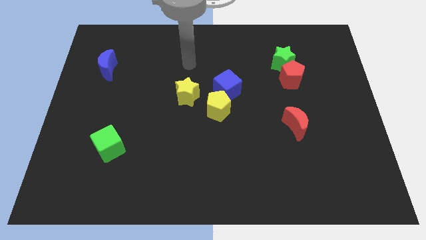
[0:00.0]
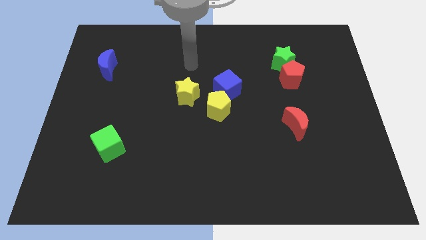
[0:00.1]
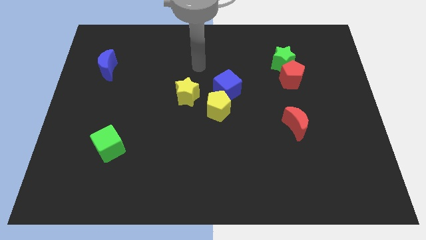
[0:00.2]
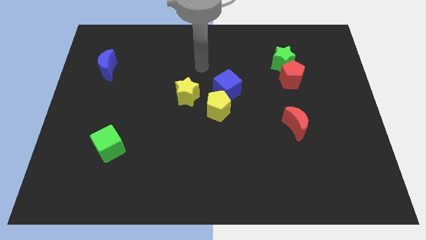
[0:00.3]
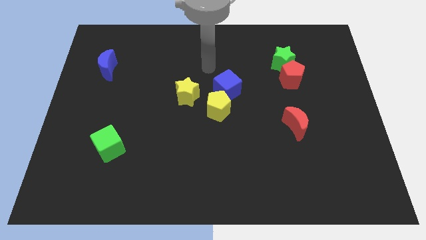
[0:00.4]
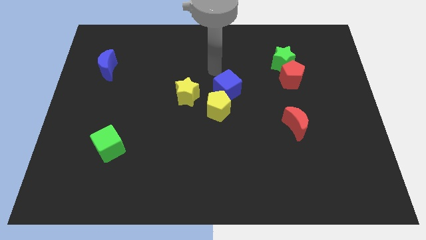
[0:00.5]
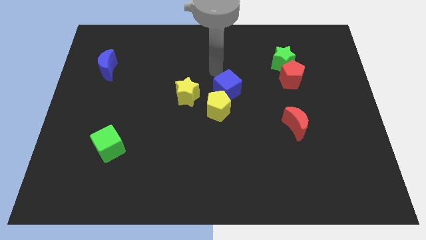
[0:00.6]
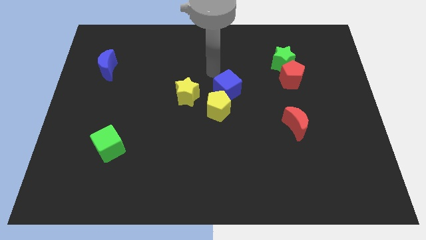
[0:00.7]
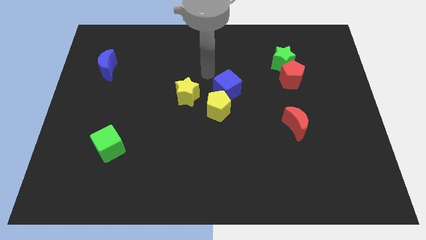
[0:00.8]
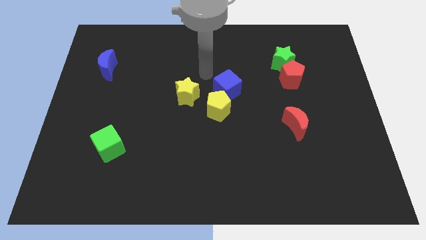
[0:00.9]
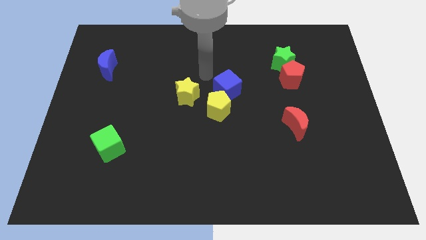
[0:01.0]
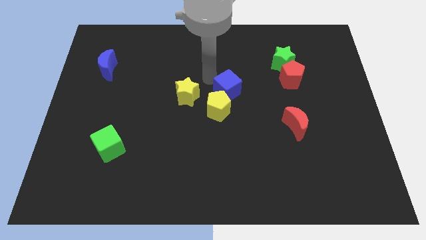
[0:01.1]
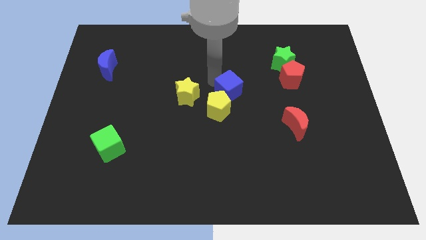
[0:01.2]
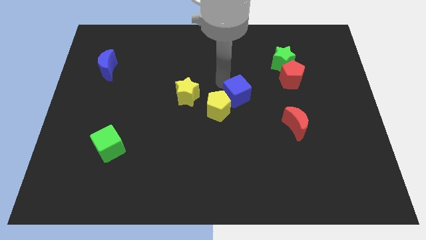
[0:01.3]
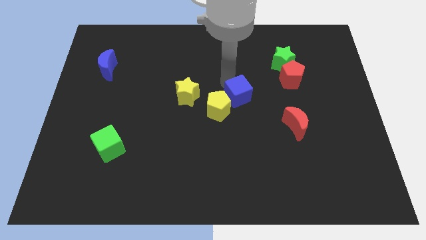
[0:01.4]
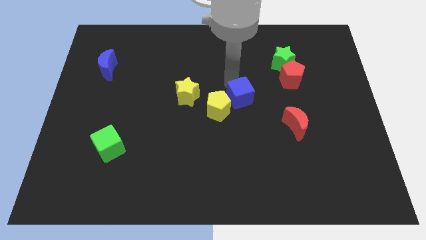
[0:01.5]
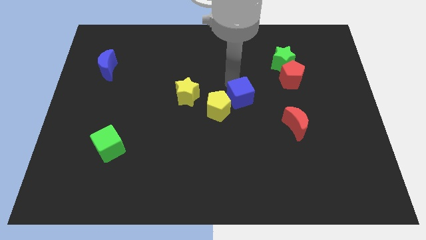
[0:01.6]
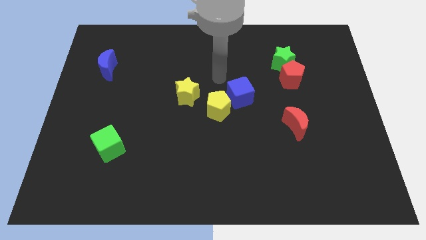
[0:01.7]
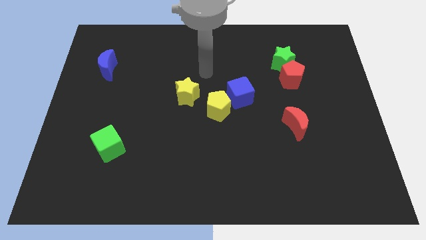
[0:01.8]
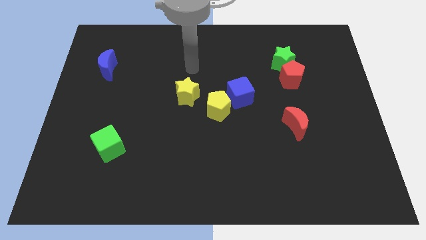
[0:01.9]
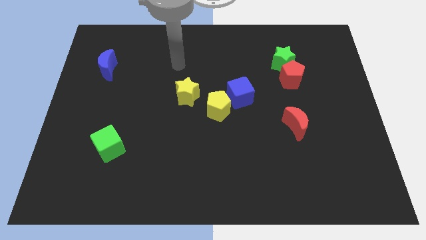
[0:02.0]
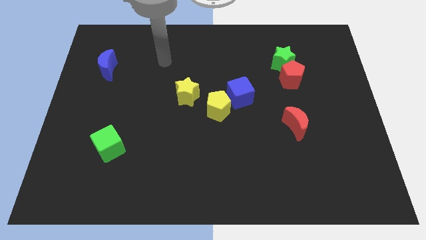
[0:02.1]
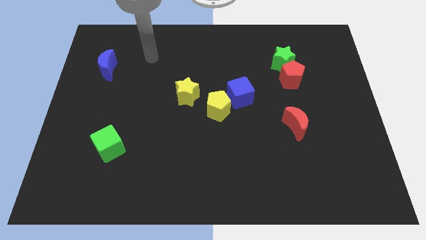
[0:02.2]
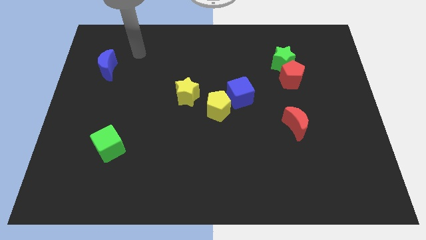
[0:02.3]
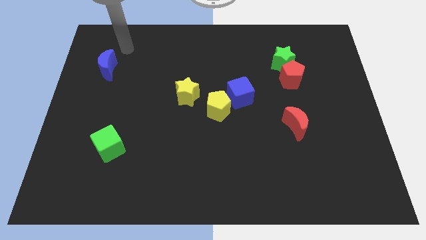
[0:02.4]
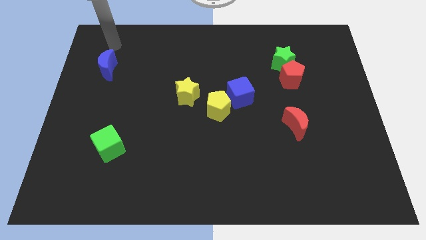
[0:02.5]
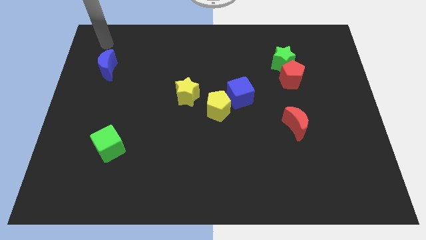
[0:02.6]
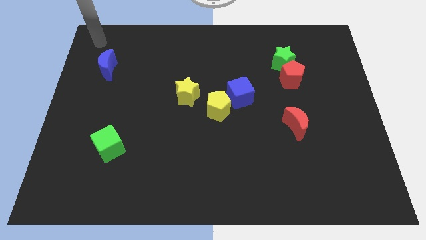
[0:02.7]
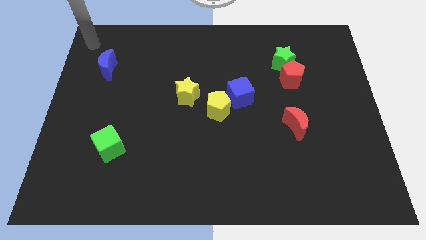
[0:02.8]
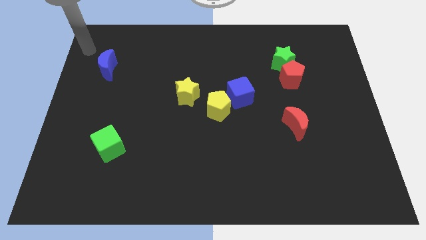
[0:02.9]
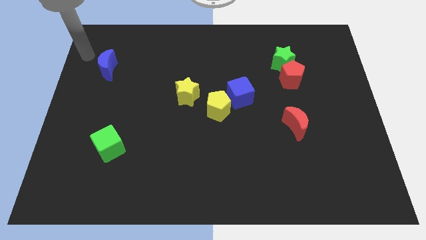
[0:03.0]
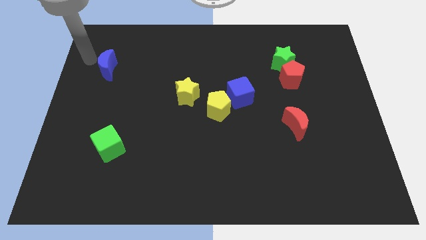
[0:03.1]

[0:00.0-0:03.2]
move the blue cube slightly to the bottom

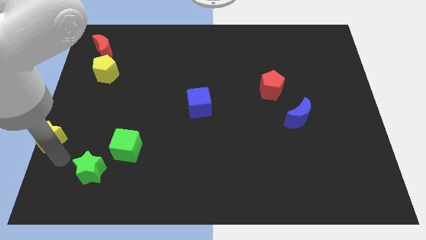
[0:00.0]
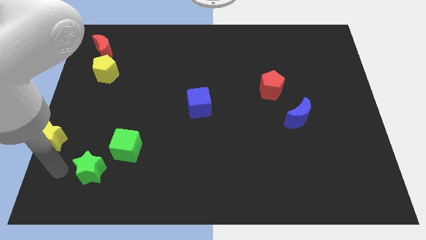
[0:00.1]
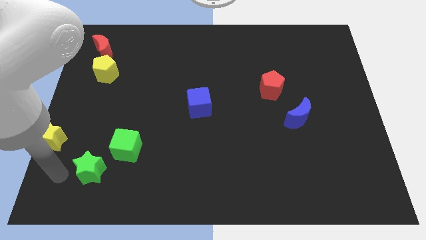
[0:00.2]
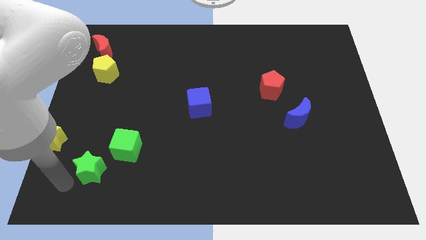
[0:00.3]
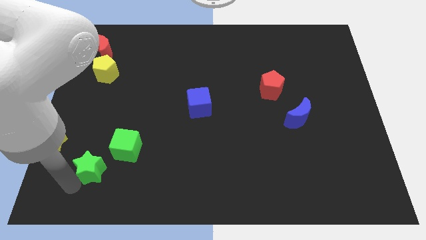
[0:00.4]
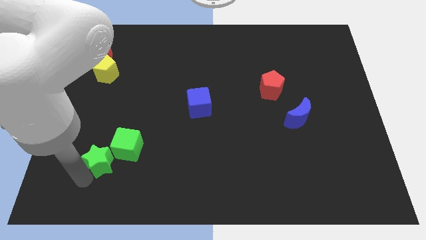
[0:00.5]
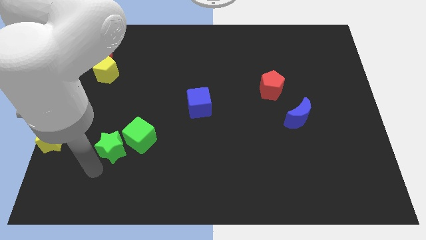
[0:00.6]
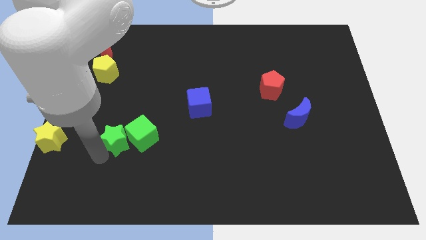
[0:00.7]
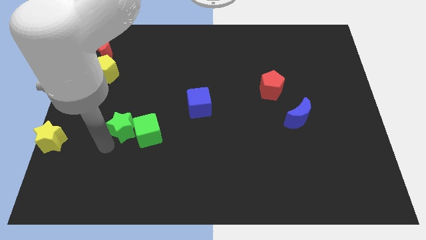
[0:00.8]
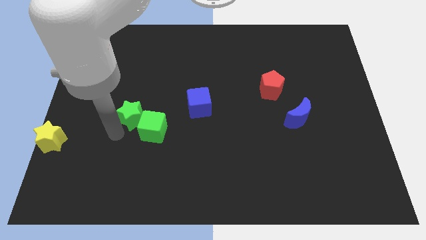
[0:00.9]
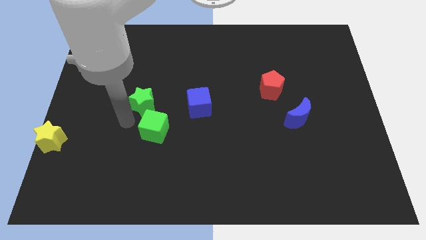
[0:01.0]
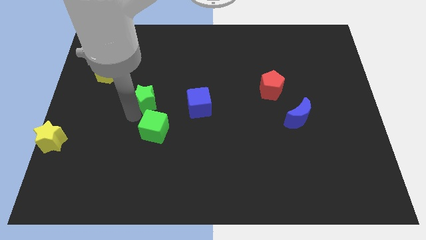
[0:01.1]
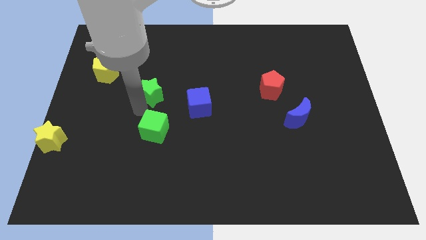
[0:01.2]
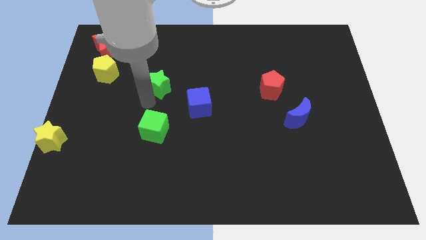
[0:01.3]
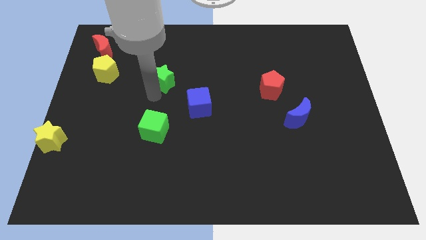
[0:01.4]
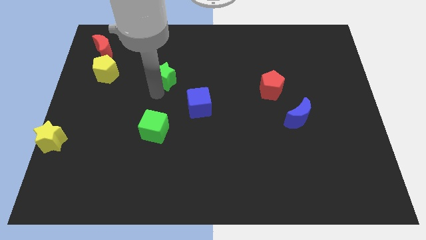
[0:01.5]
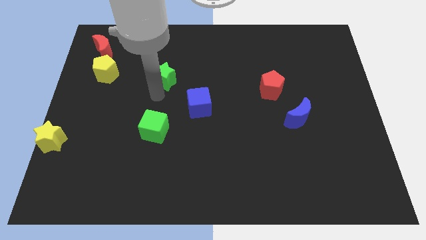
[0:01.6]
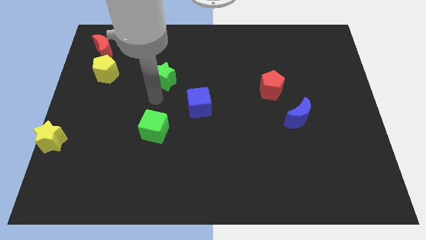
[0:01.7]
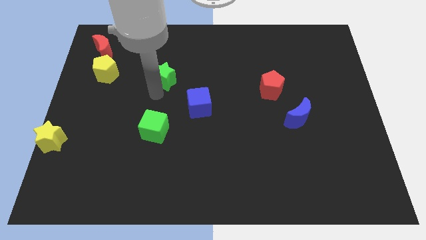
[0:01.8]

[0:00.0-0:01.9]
push the green star to the right of the yellow pentagon

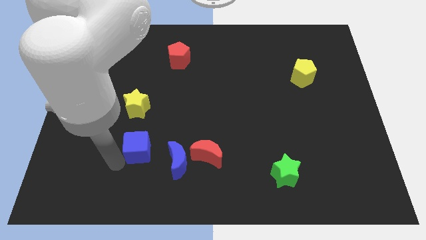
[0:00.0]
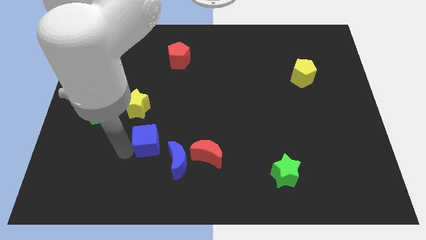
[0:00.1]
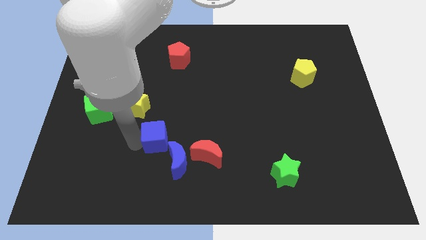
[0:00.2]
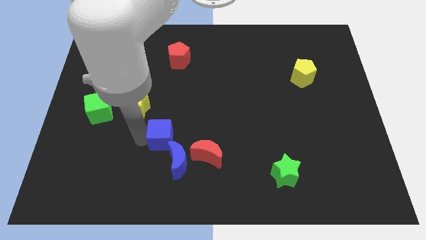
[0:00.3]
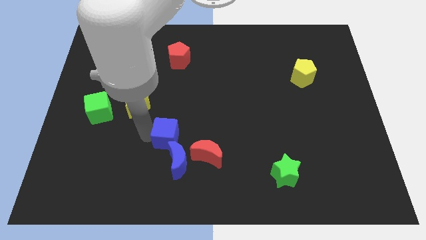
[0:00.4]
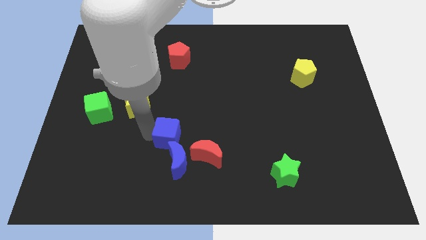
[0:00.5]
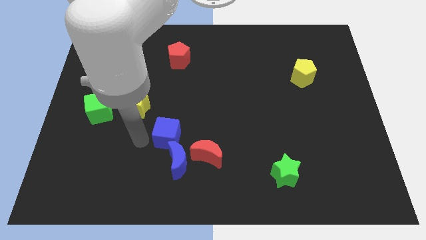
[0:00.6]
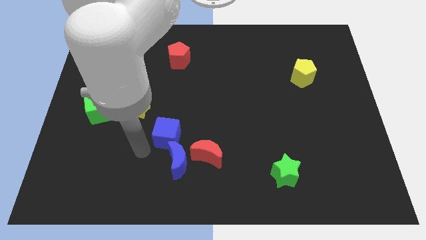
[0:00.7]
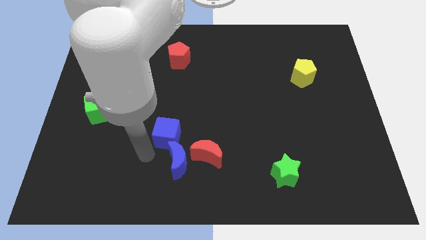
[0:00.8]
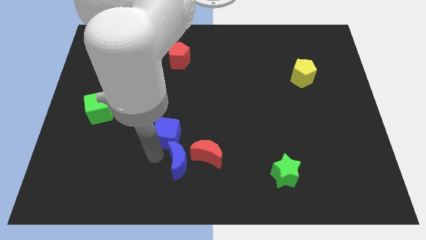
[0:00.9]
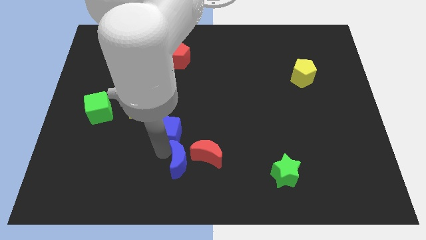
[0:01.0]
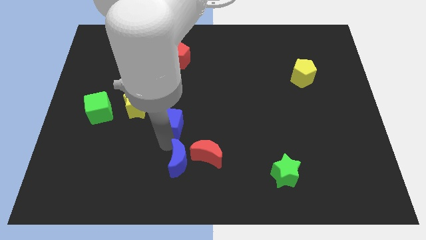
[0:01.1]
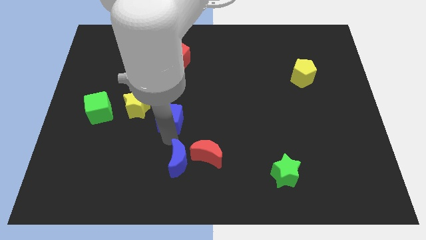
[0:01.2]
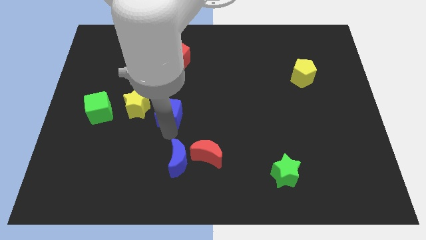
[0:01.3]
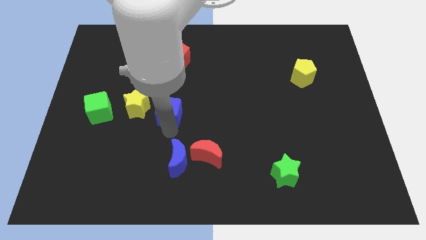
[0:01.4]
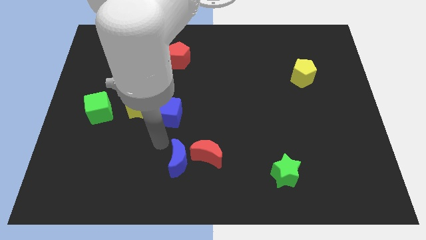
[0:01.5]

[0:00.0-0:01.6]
push the blue cube to the right of the yellow star

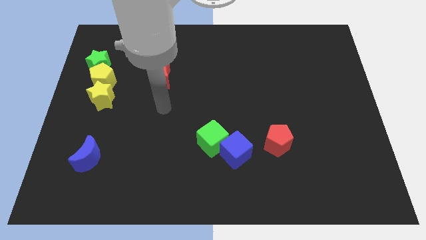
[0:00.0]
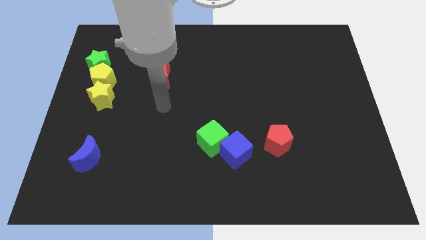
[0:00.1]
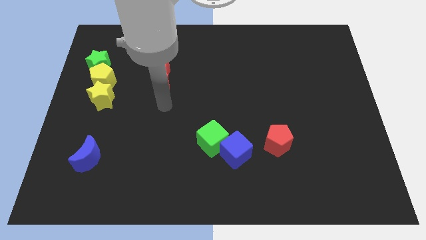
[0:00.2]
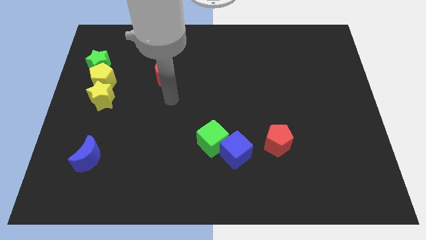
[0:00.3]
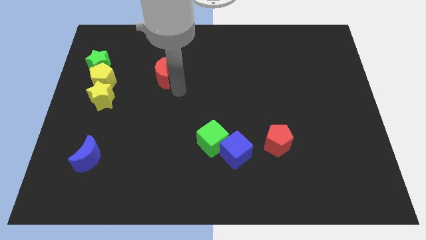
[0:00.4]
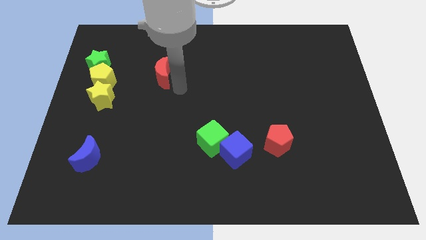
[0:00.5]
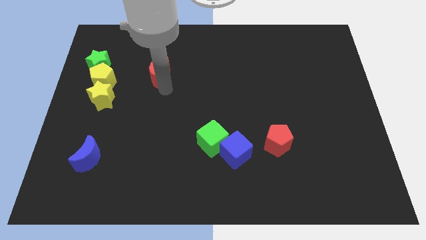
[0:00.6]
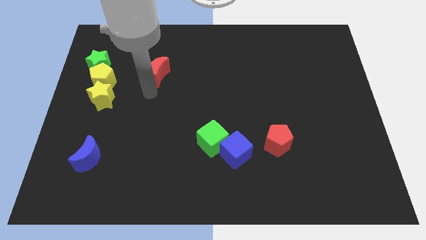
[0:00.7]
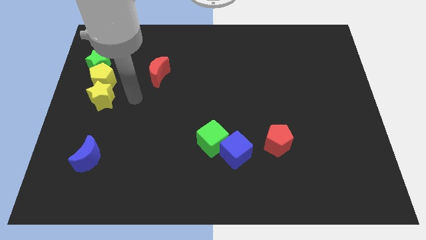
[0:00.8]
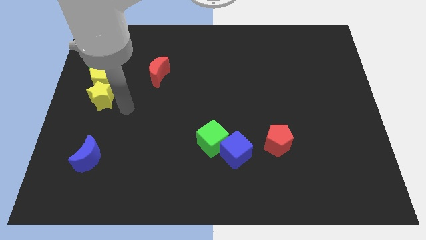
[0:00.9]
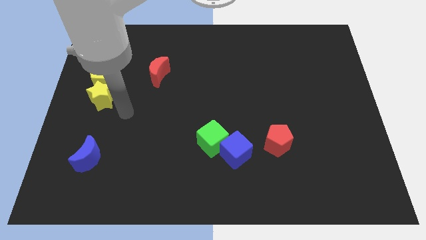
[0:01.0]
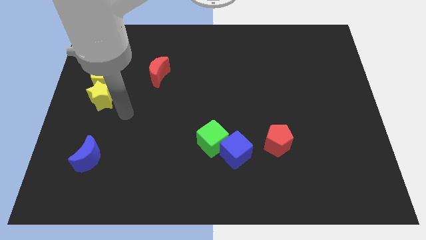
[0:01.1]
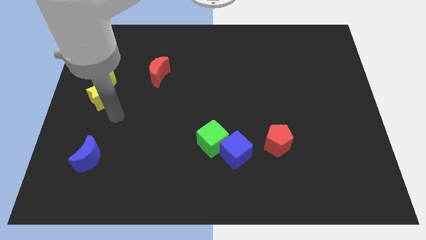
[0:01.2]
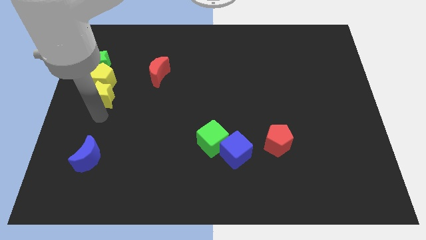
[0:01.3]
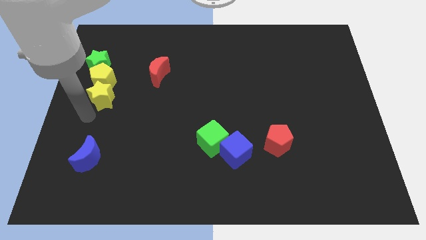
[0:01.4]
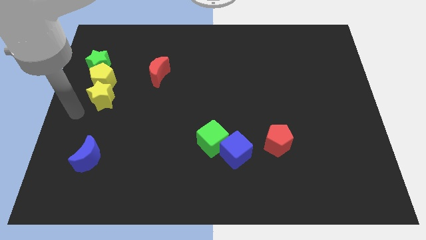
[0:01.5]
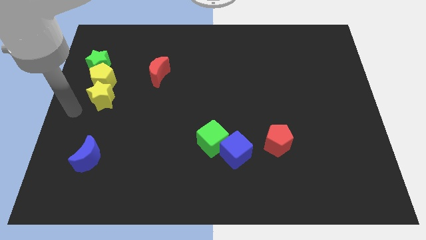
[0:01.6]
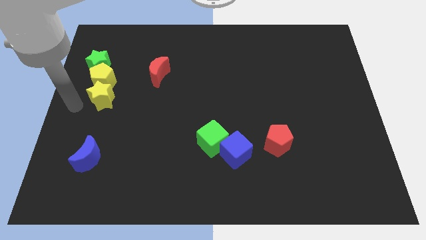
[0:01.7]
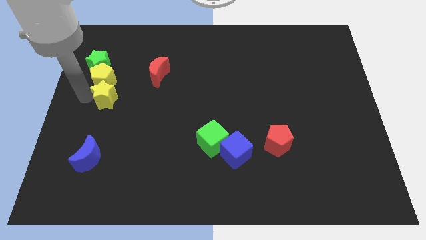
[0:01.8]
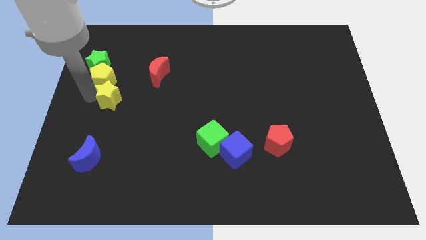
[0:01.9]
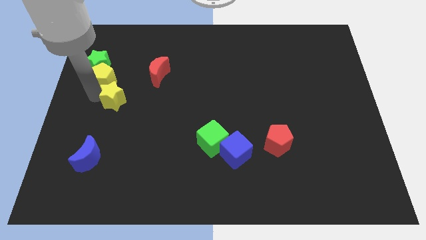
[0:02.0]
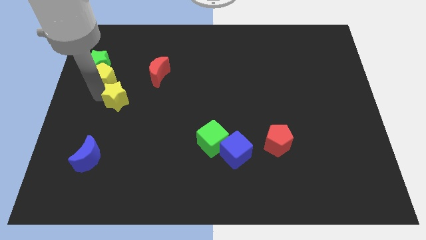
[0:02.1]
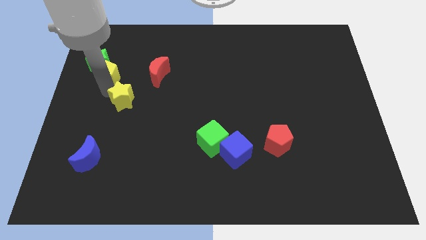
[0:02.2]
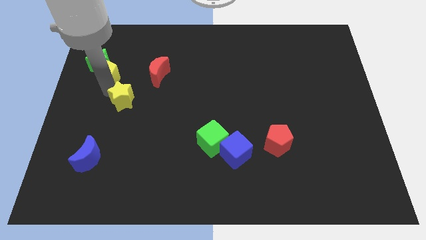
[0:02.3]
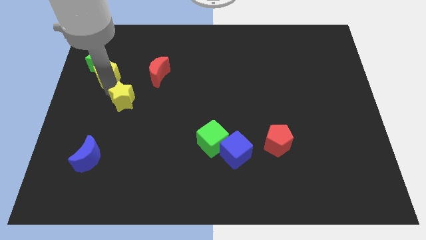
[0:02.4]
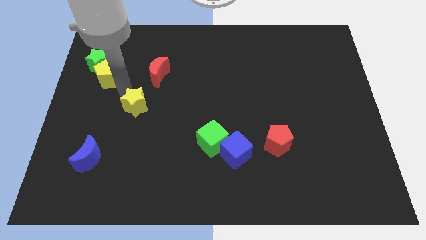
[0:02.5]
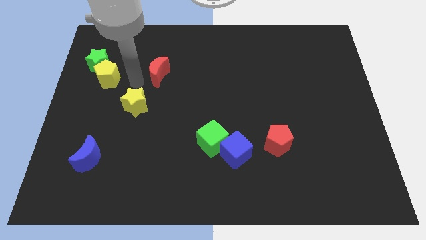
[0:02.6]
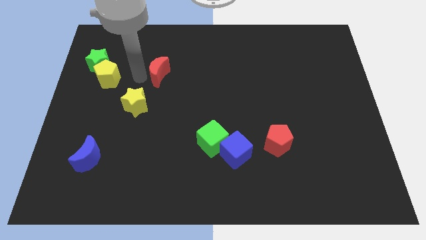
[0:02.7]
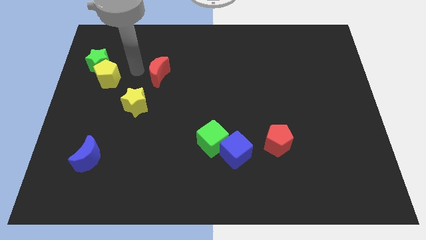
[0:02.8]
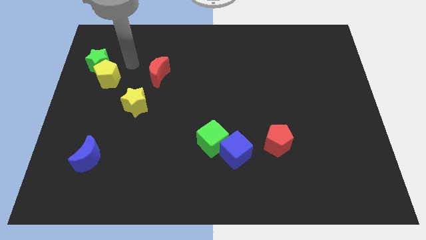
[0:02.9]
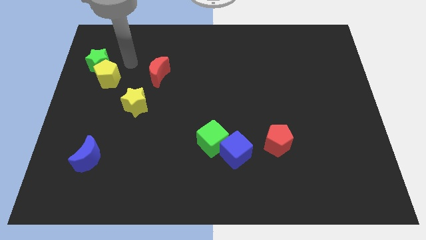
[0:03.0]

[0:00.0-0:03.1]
separate yellow star from yellow pentagon towards right
